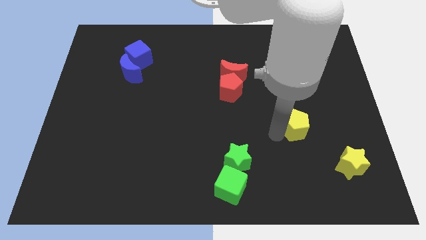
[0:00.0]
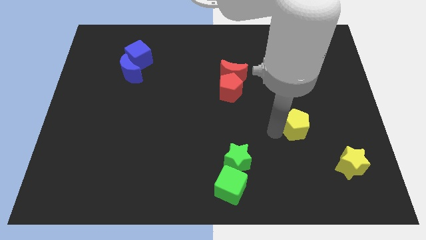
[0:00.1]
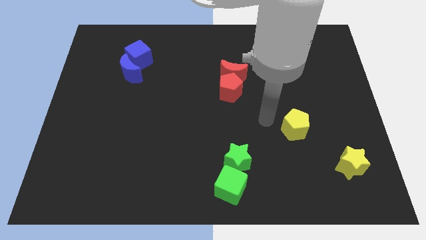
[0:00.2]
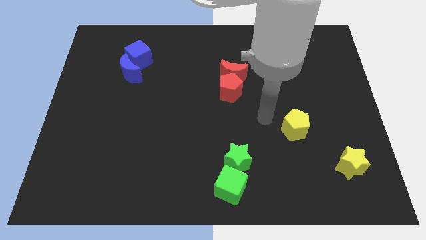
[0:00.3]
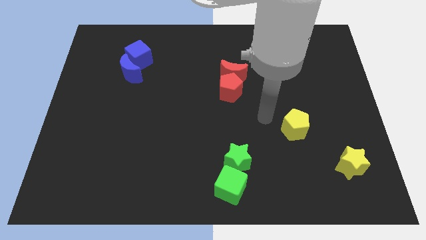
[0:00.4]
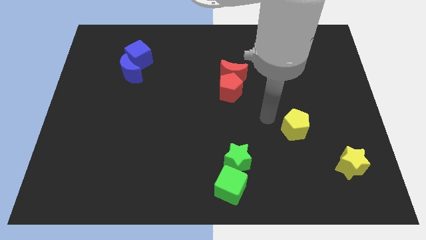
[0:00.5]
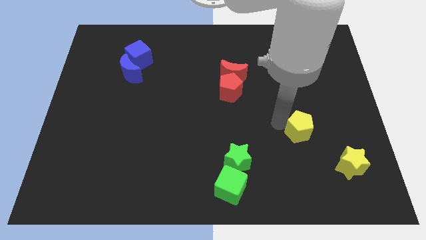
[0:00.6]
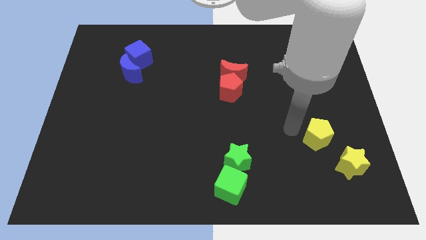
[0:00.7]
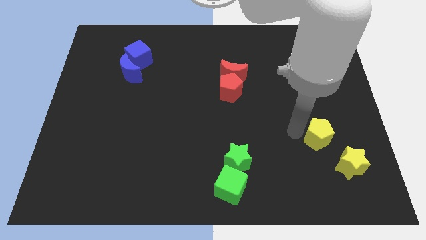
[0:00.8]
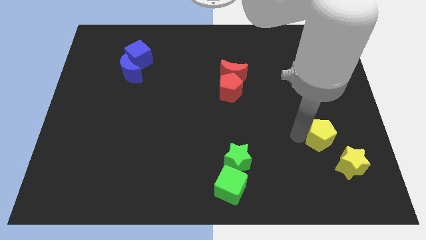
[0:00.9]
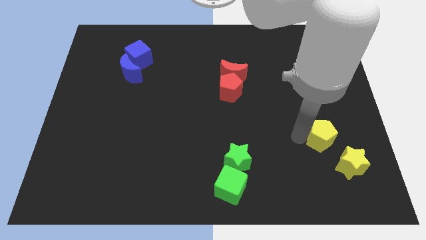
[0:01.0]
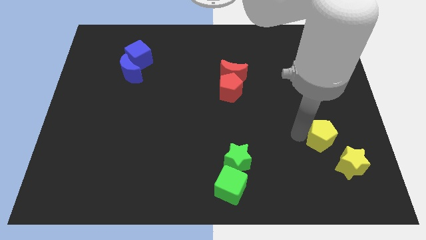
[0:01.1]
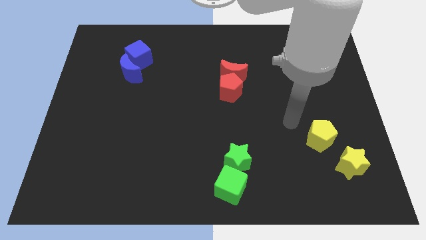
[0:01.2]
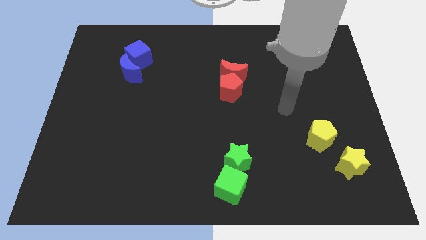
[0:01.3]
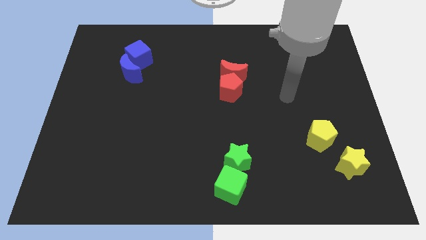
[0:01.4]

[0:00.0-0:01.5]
move the yellow pentagon towards the yellow star

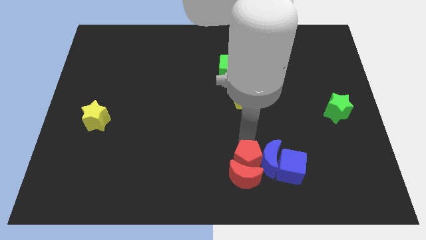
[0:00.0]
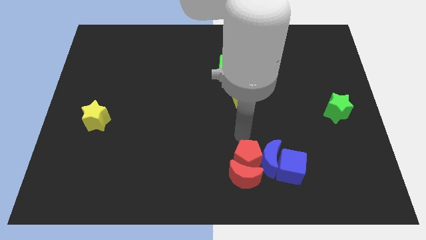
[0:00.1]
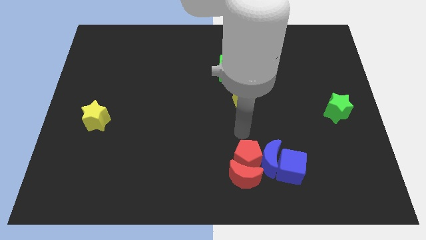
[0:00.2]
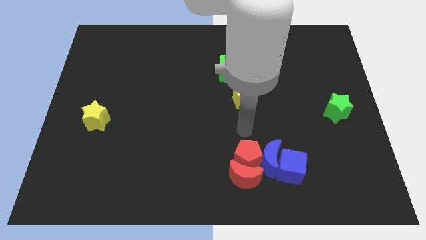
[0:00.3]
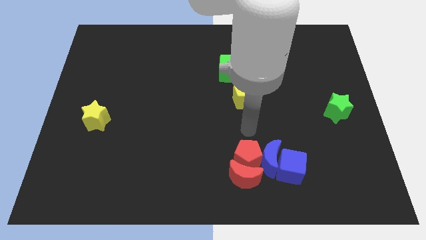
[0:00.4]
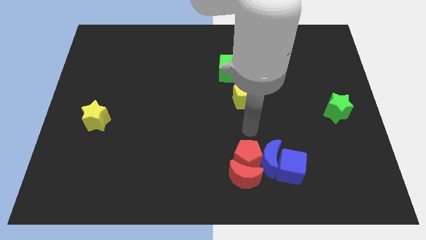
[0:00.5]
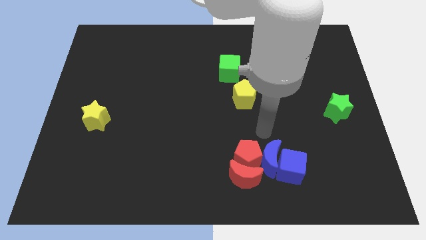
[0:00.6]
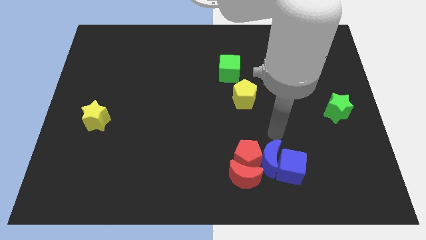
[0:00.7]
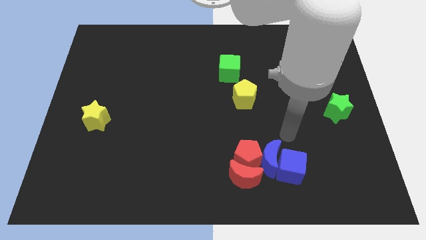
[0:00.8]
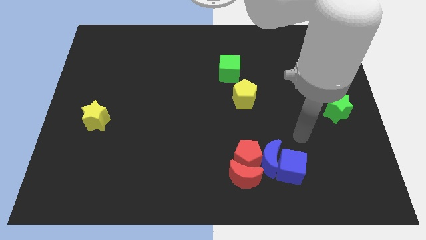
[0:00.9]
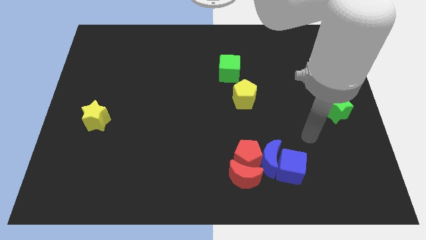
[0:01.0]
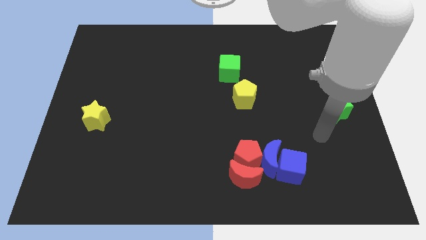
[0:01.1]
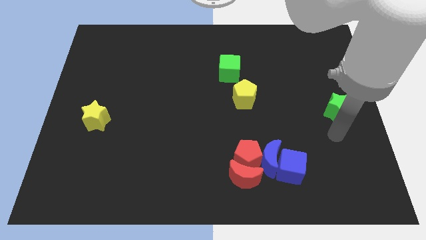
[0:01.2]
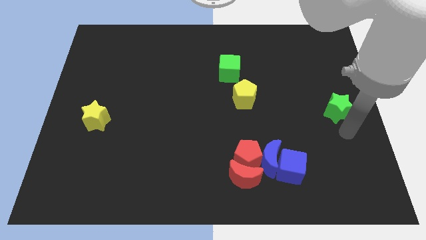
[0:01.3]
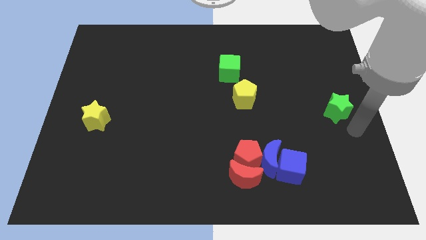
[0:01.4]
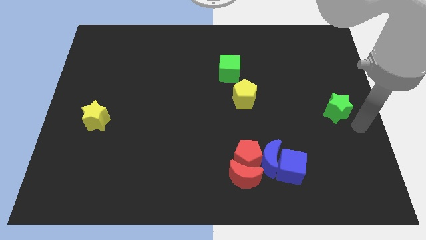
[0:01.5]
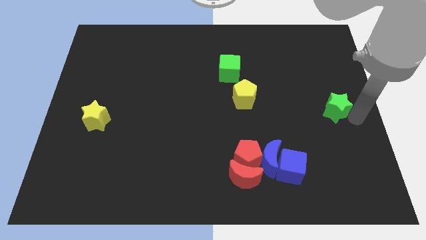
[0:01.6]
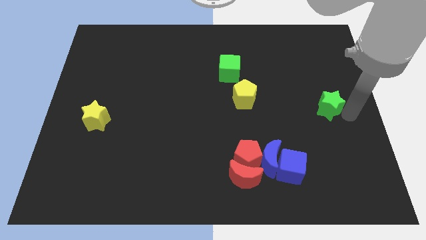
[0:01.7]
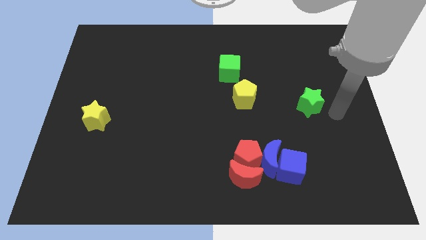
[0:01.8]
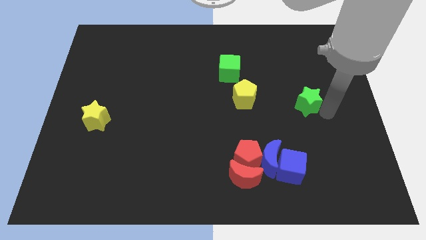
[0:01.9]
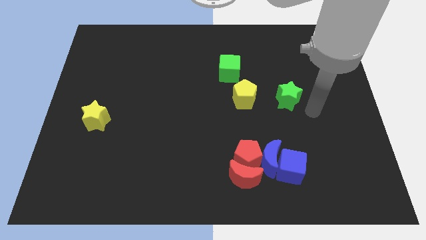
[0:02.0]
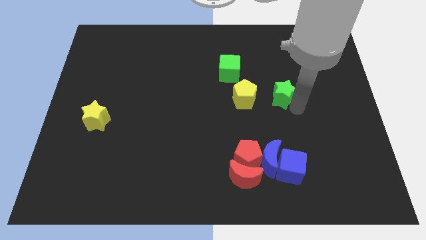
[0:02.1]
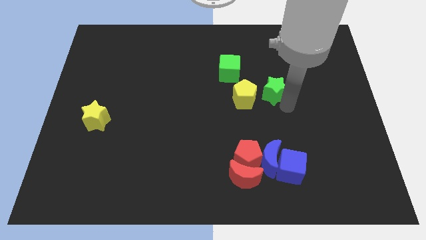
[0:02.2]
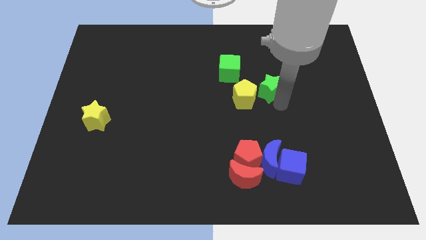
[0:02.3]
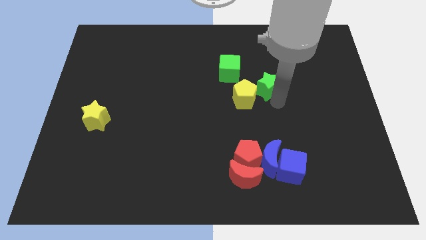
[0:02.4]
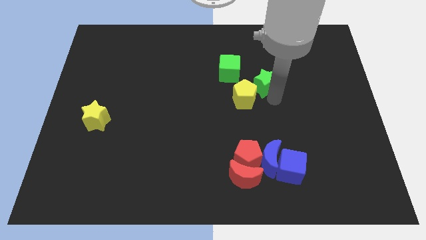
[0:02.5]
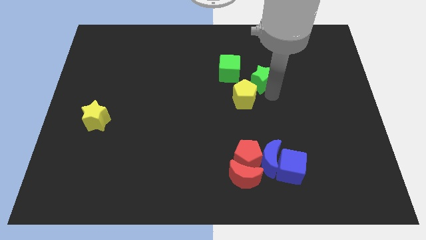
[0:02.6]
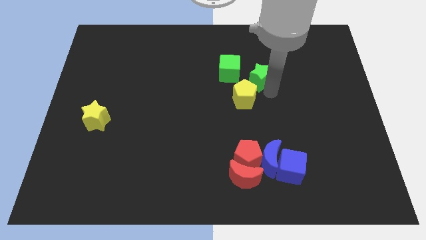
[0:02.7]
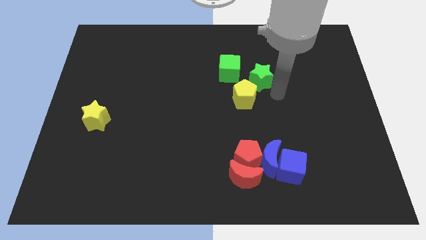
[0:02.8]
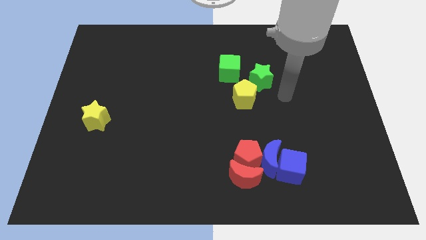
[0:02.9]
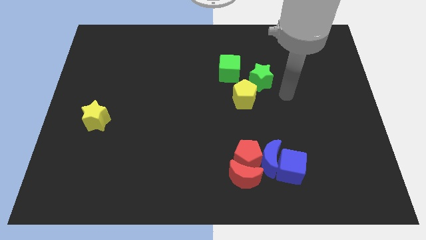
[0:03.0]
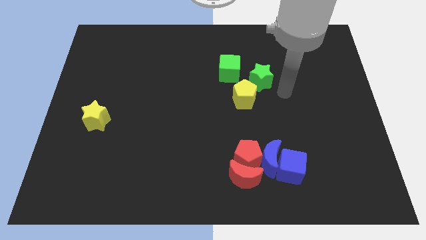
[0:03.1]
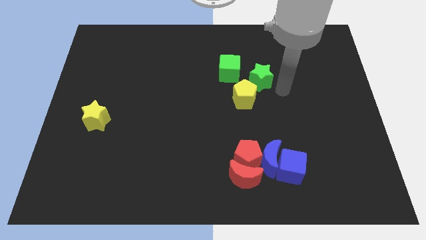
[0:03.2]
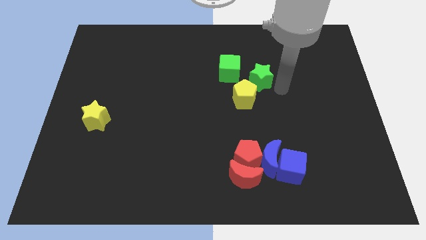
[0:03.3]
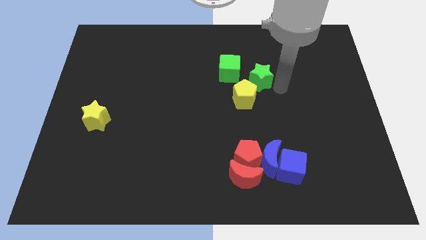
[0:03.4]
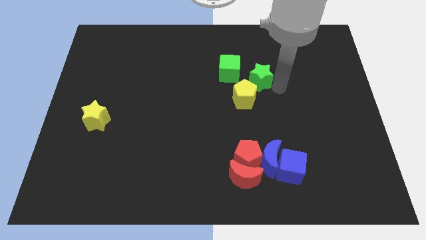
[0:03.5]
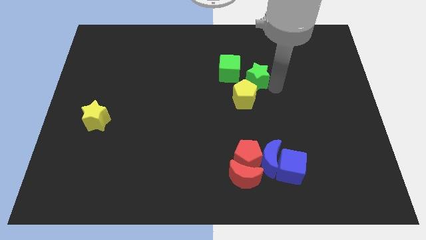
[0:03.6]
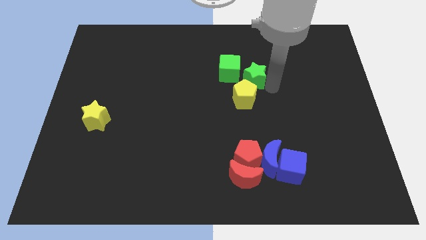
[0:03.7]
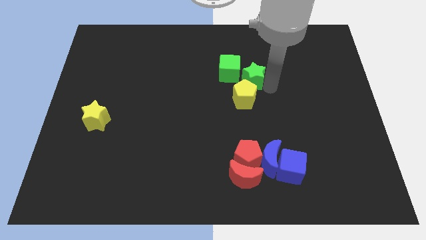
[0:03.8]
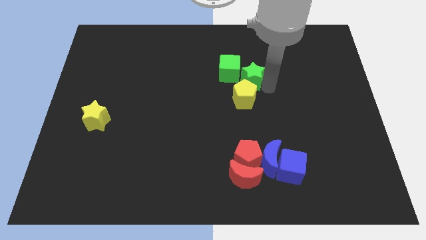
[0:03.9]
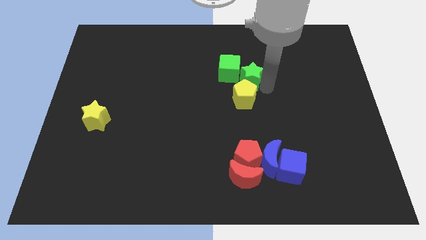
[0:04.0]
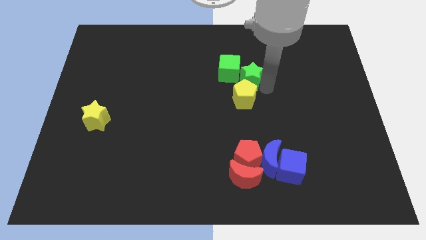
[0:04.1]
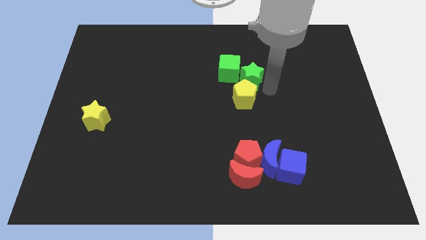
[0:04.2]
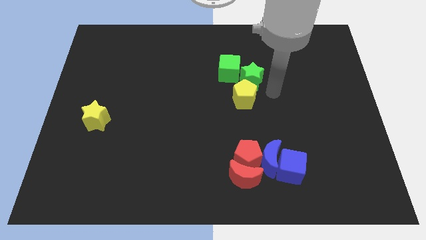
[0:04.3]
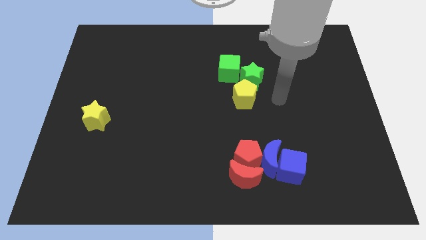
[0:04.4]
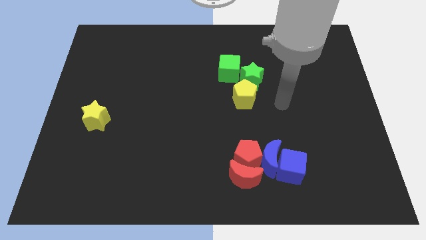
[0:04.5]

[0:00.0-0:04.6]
move the green star into the green cube

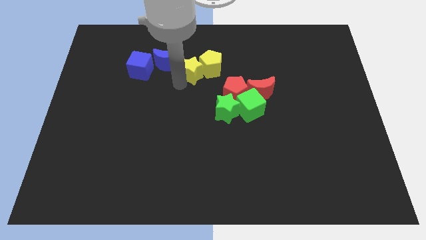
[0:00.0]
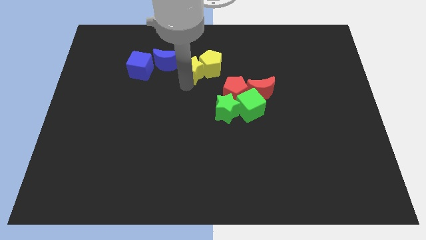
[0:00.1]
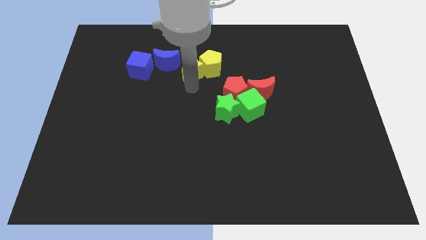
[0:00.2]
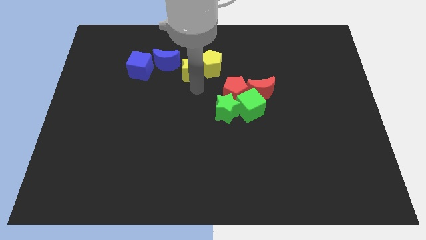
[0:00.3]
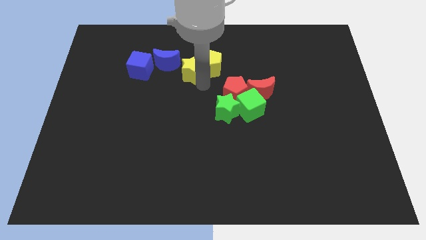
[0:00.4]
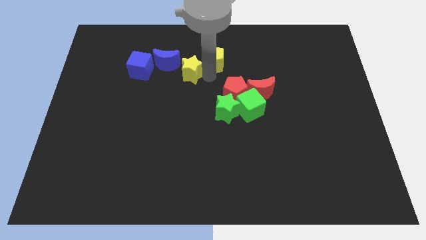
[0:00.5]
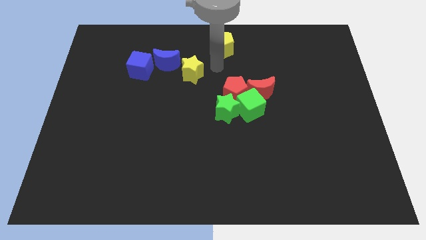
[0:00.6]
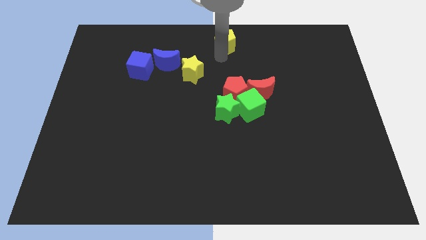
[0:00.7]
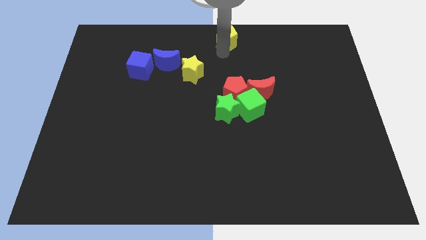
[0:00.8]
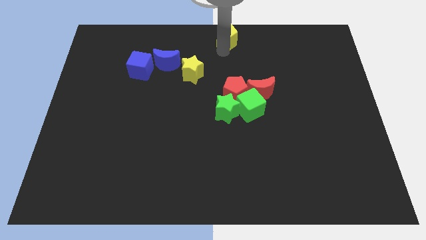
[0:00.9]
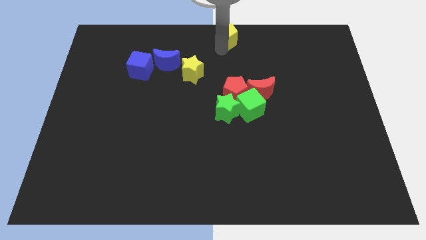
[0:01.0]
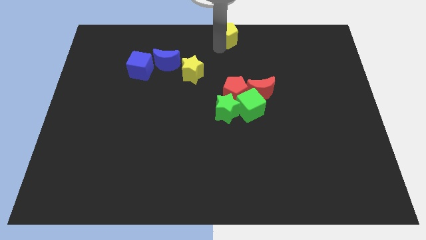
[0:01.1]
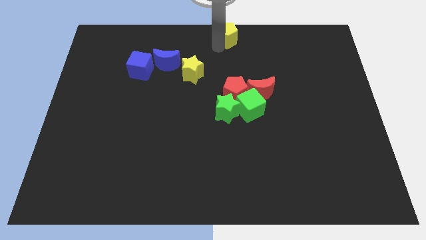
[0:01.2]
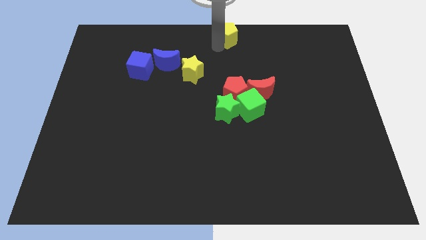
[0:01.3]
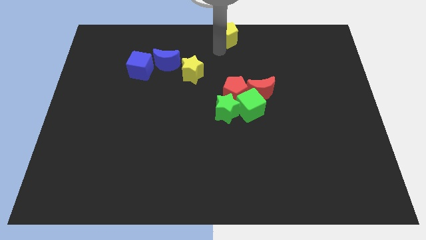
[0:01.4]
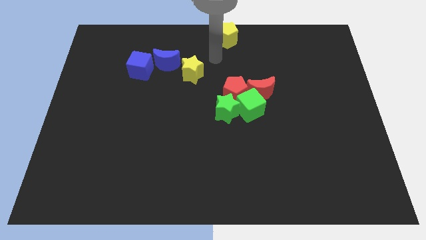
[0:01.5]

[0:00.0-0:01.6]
place yellow pentagon above red pentagon

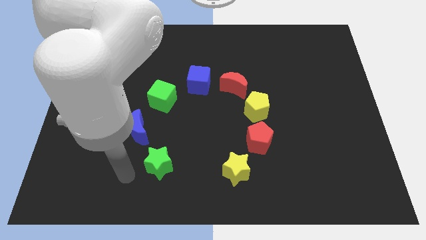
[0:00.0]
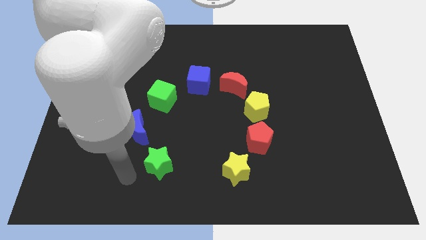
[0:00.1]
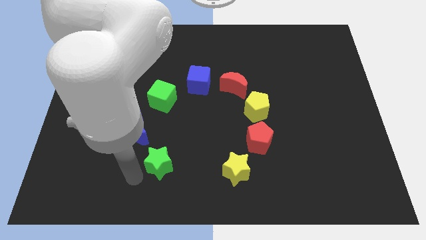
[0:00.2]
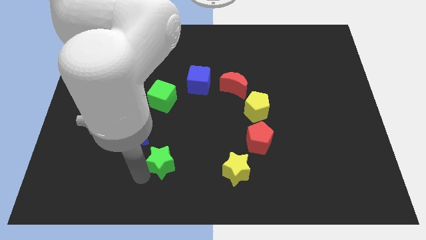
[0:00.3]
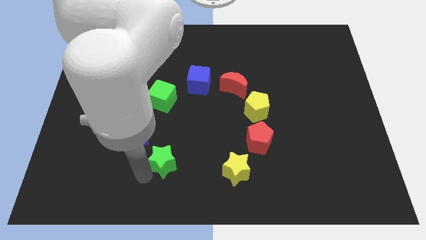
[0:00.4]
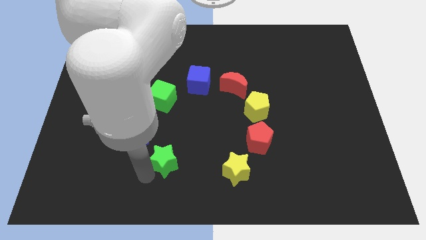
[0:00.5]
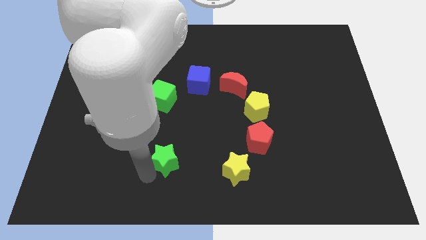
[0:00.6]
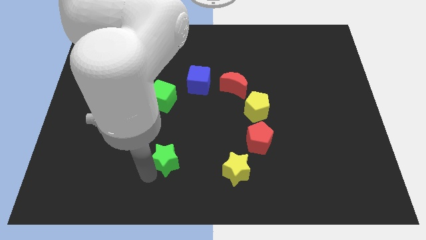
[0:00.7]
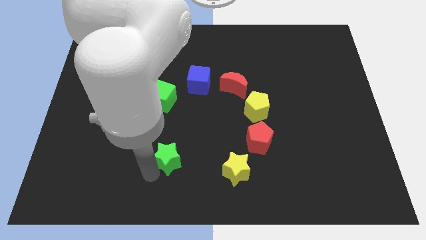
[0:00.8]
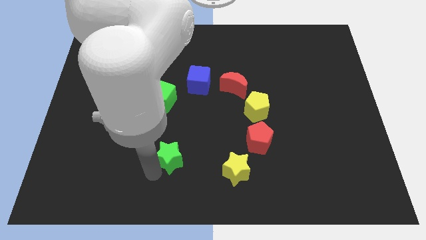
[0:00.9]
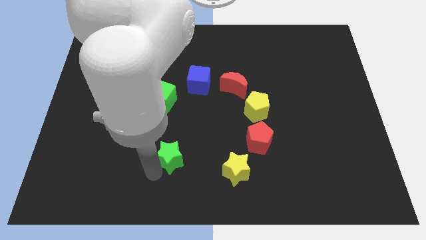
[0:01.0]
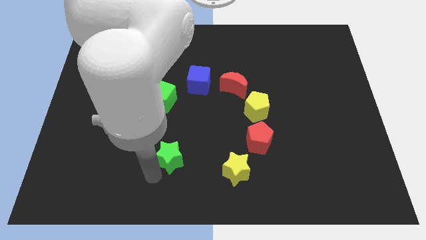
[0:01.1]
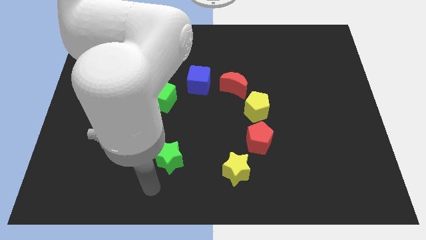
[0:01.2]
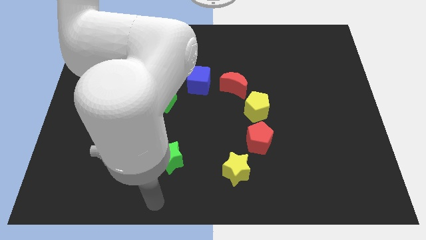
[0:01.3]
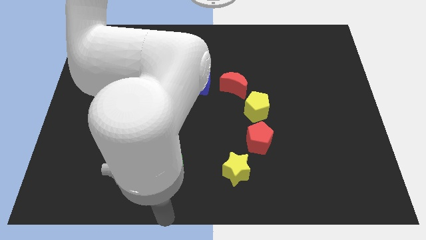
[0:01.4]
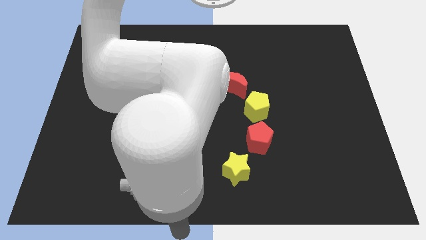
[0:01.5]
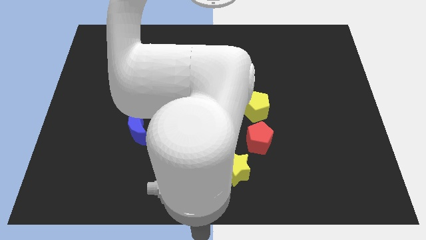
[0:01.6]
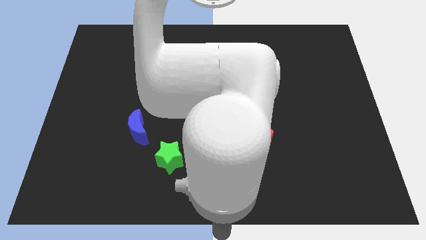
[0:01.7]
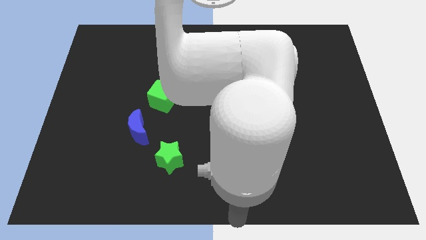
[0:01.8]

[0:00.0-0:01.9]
put the green star to the bottom right side of the blue moon
